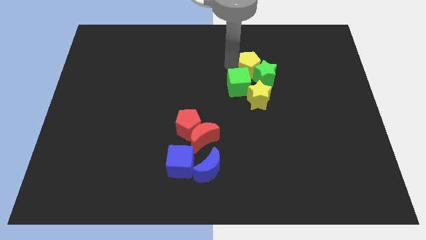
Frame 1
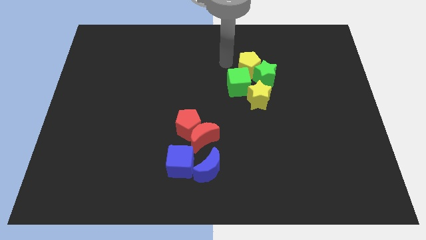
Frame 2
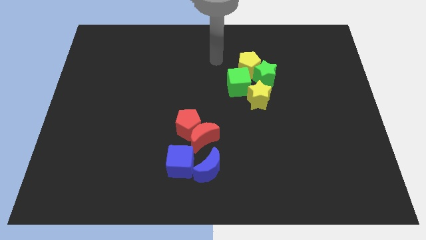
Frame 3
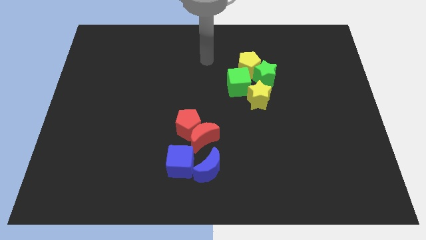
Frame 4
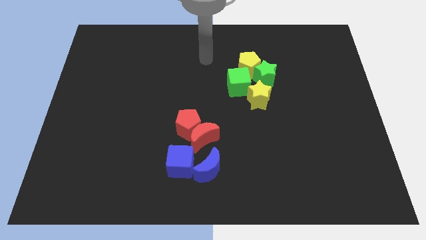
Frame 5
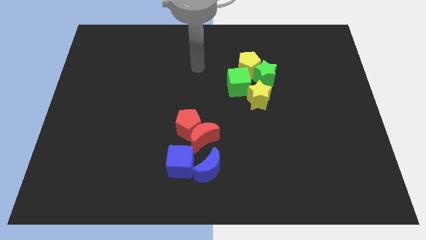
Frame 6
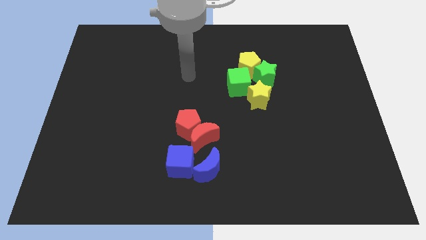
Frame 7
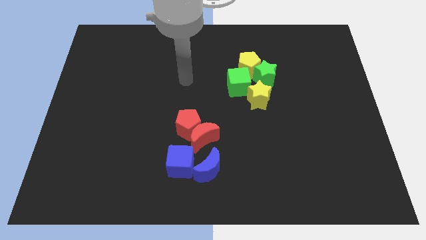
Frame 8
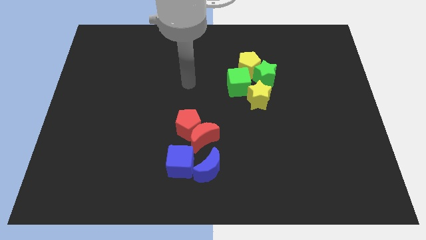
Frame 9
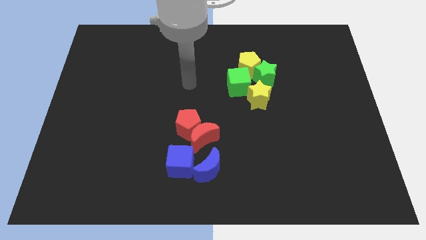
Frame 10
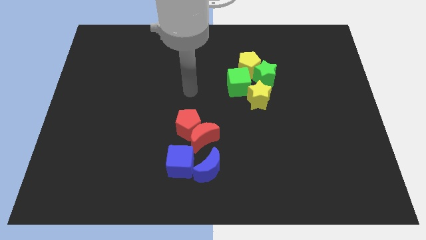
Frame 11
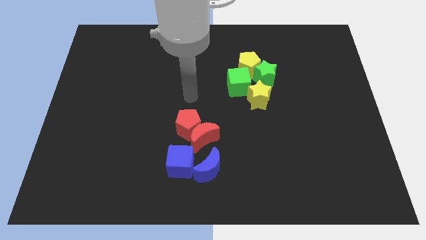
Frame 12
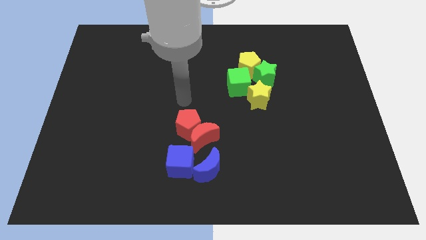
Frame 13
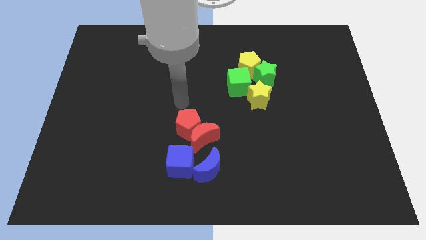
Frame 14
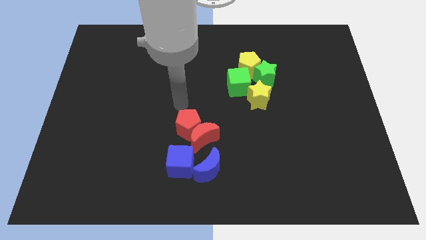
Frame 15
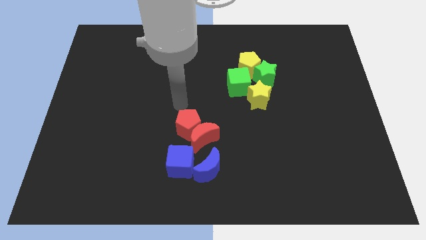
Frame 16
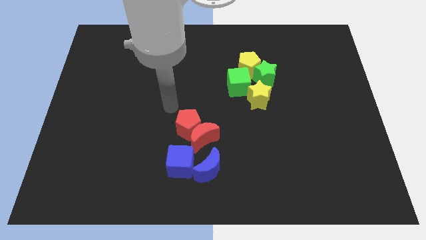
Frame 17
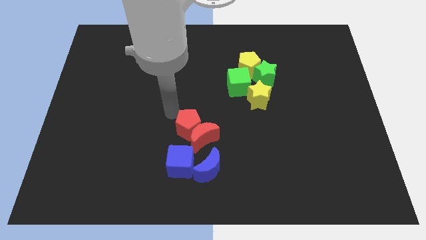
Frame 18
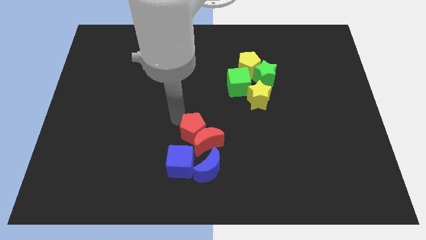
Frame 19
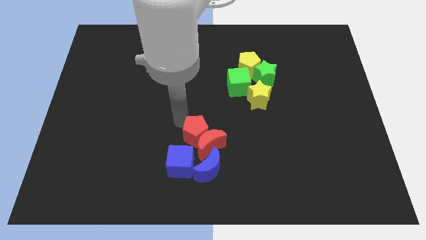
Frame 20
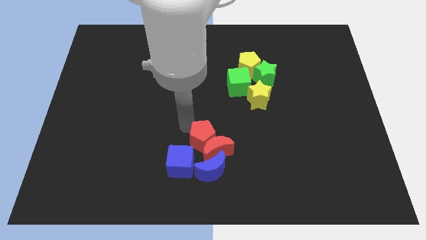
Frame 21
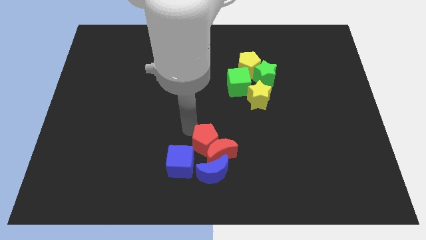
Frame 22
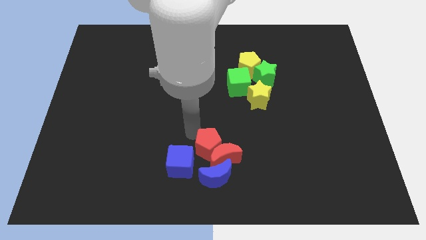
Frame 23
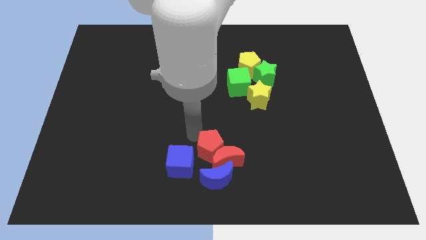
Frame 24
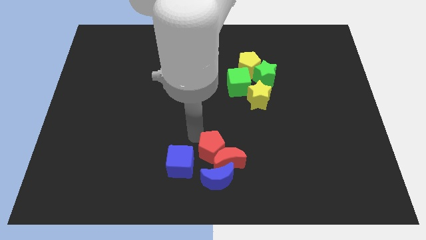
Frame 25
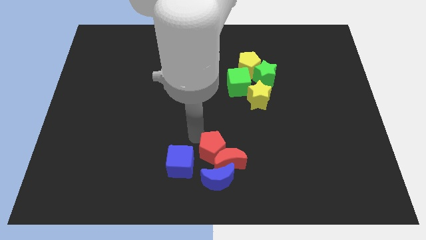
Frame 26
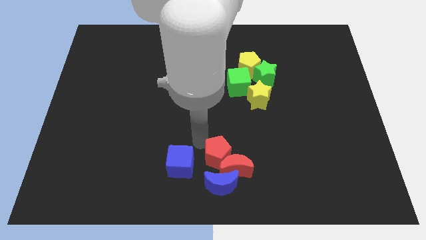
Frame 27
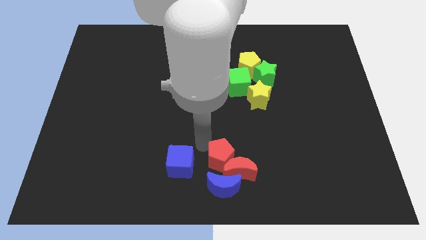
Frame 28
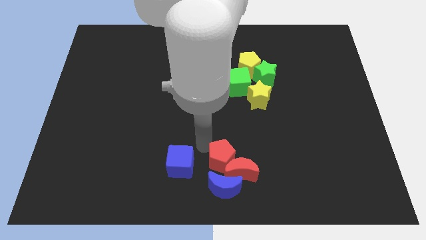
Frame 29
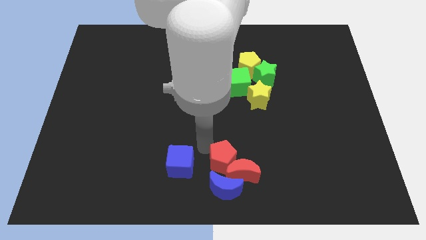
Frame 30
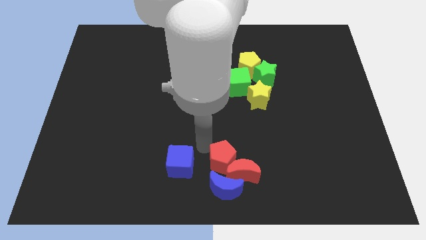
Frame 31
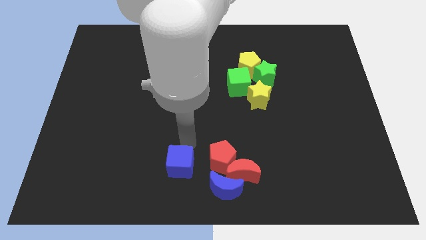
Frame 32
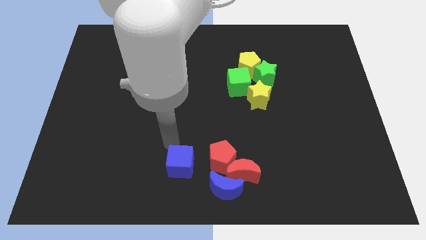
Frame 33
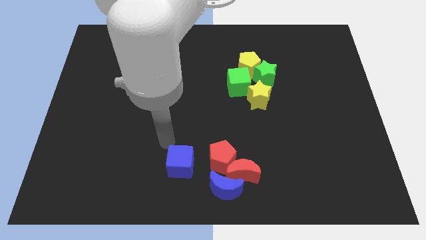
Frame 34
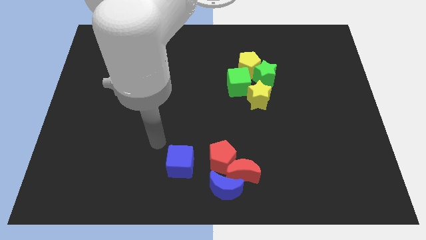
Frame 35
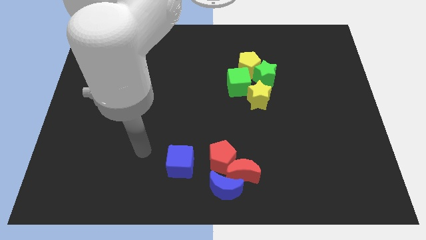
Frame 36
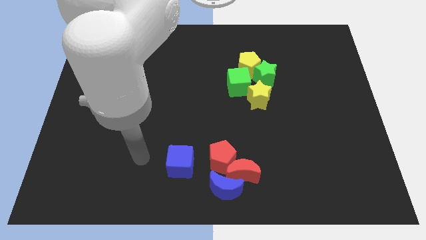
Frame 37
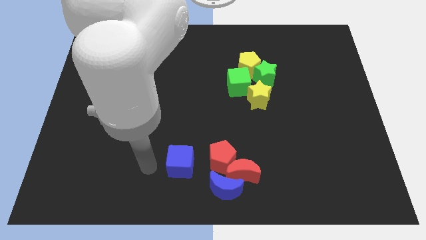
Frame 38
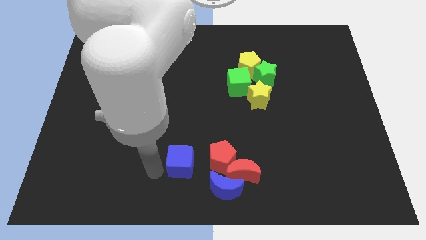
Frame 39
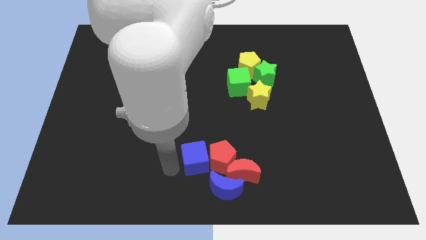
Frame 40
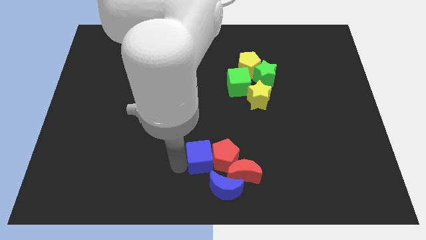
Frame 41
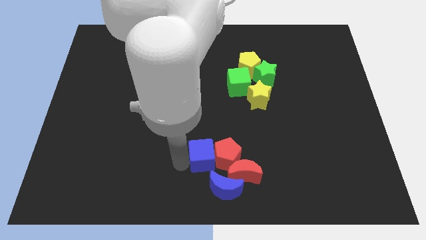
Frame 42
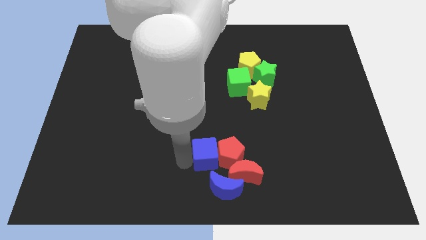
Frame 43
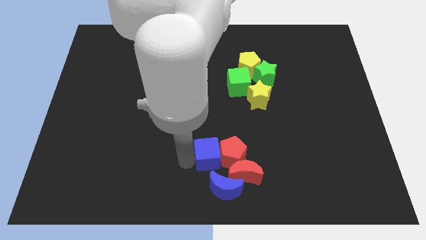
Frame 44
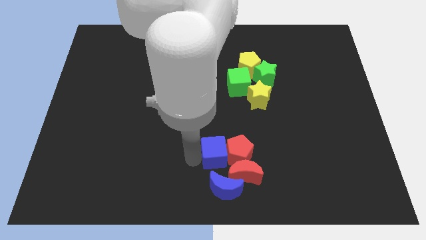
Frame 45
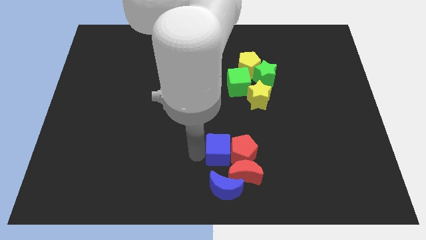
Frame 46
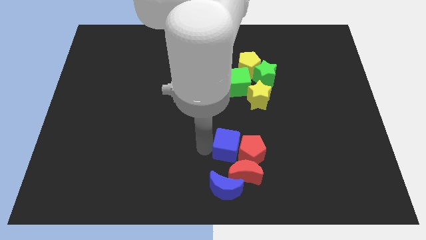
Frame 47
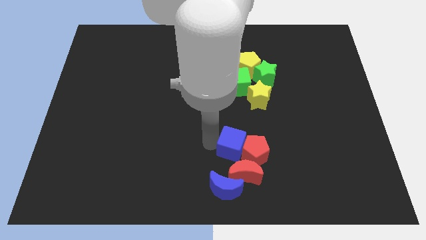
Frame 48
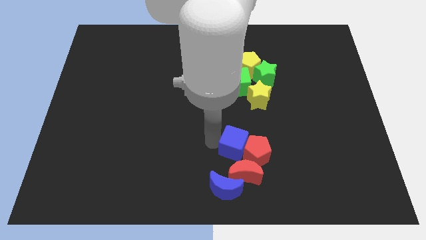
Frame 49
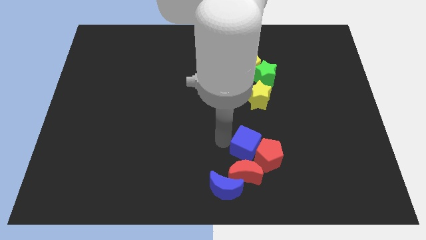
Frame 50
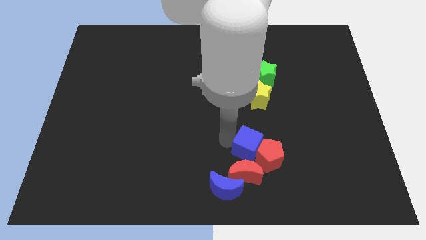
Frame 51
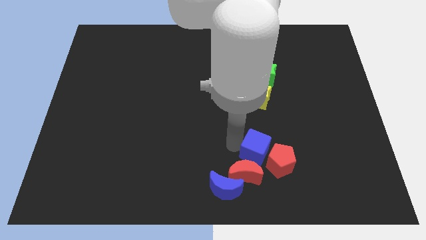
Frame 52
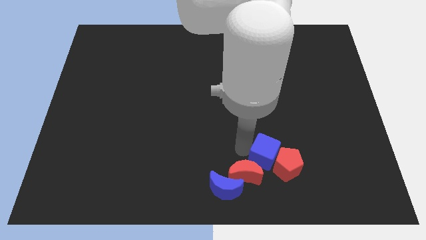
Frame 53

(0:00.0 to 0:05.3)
push a group of blocks to the right side of the board

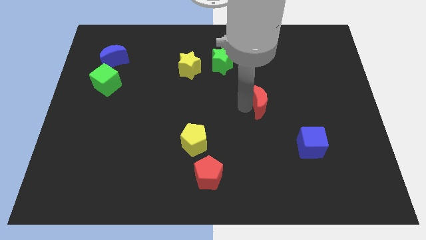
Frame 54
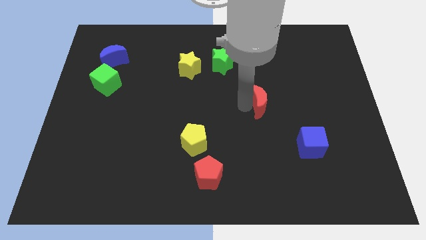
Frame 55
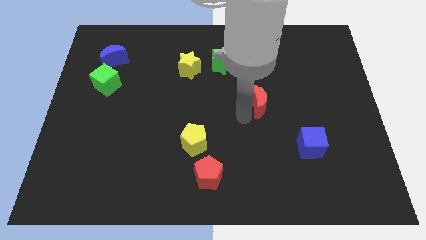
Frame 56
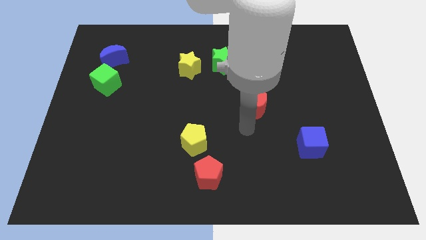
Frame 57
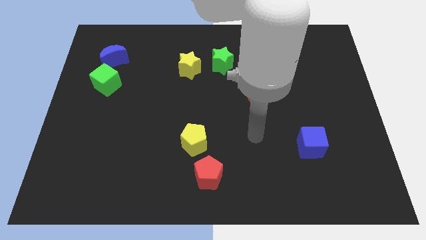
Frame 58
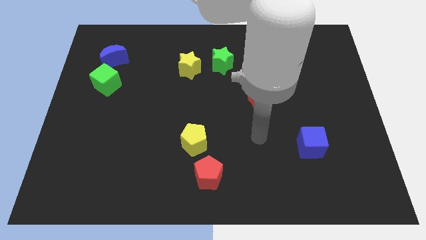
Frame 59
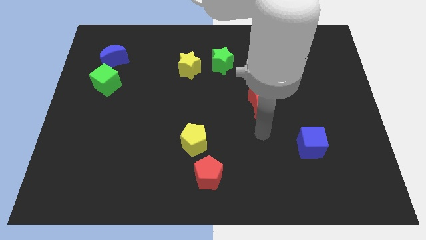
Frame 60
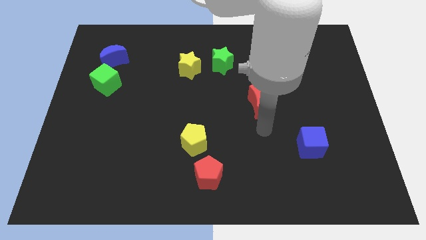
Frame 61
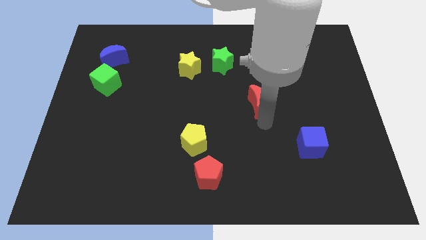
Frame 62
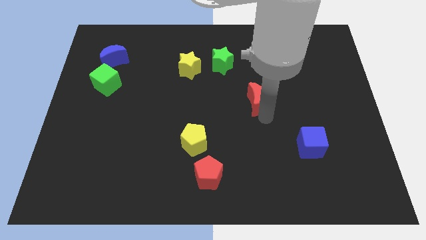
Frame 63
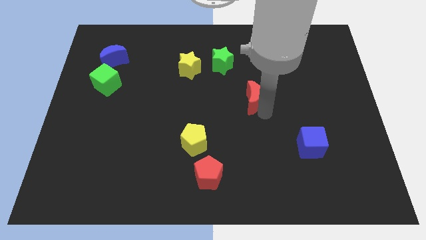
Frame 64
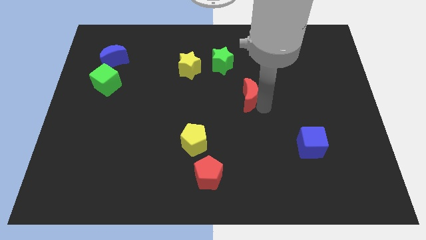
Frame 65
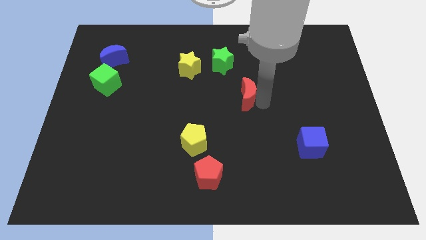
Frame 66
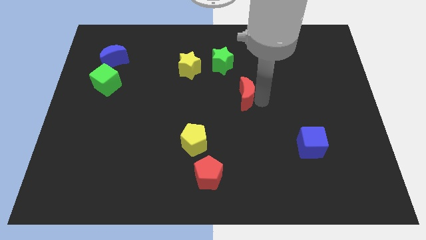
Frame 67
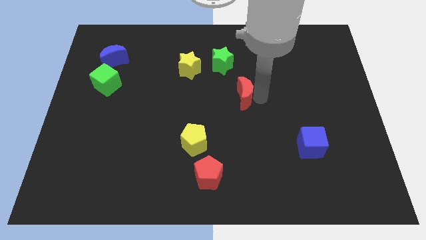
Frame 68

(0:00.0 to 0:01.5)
move the red crescent up slightly

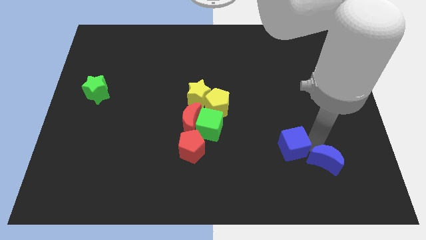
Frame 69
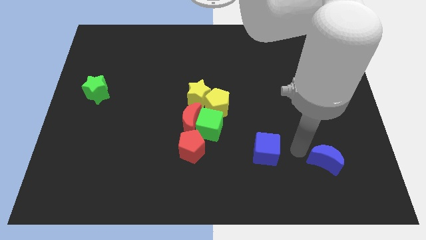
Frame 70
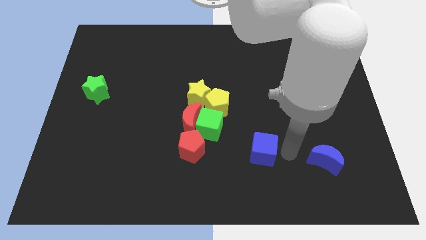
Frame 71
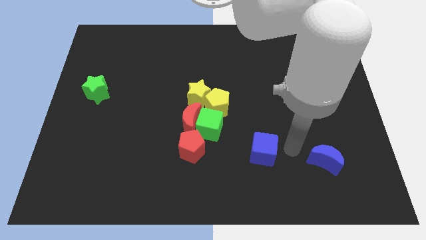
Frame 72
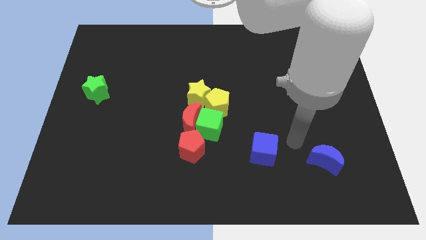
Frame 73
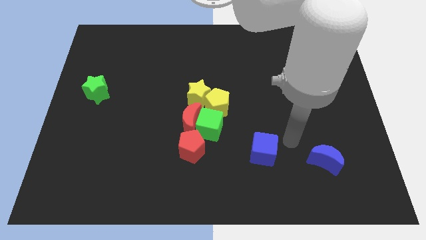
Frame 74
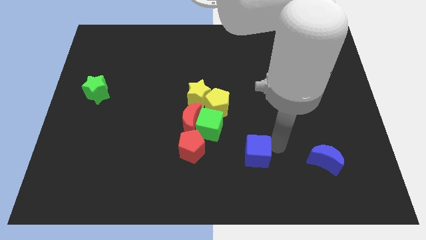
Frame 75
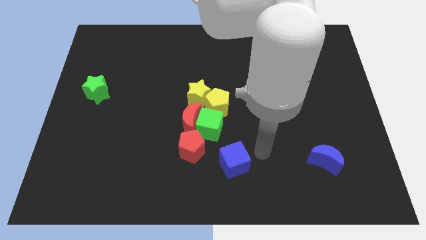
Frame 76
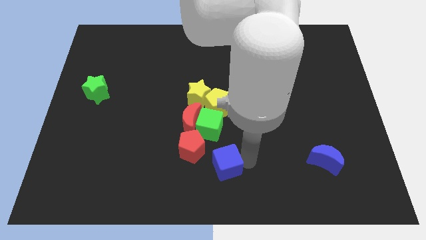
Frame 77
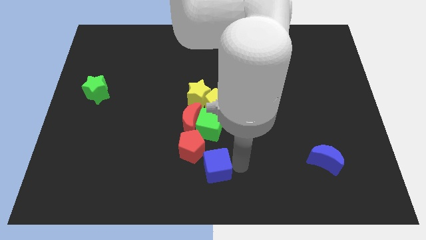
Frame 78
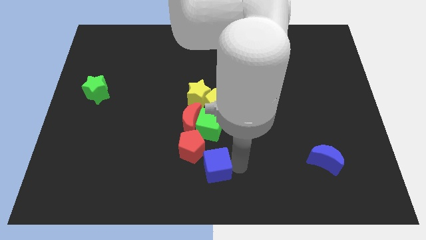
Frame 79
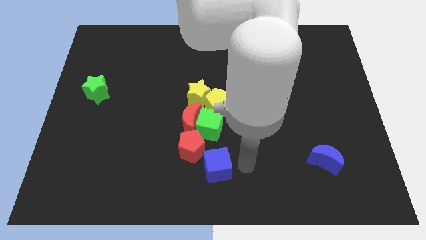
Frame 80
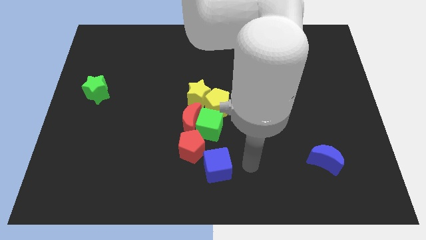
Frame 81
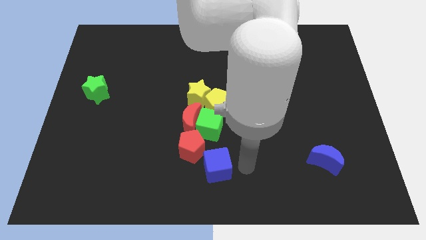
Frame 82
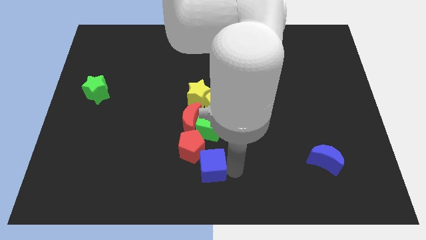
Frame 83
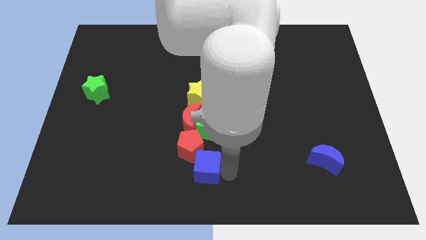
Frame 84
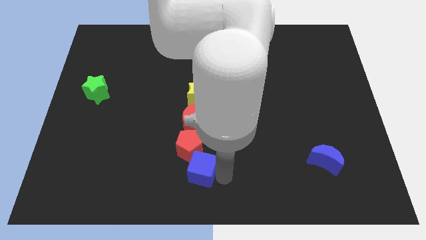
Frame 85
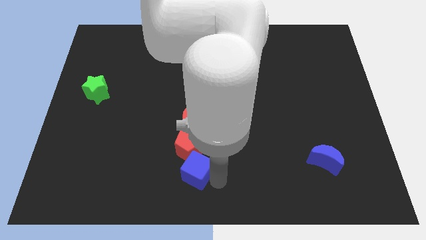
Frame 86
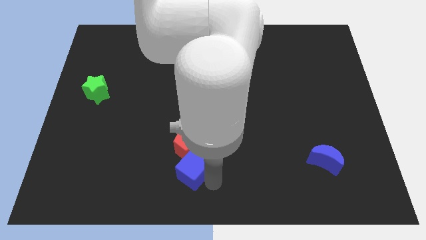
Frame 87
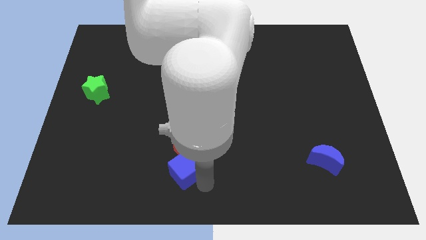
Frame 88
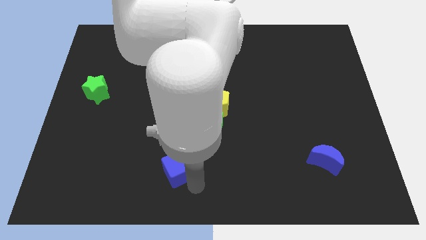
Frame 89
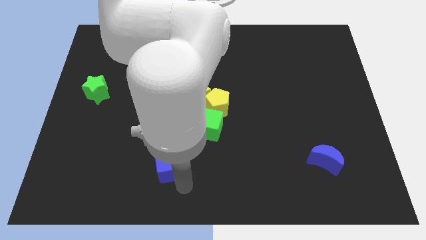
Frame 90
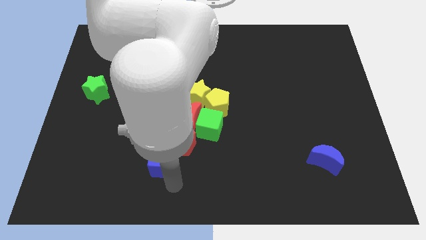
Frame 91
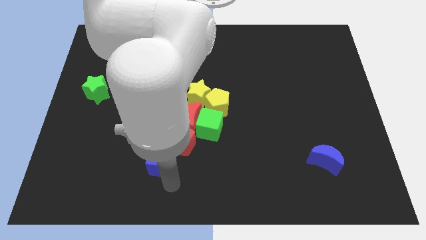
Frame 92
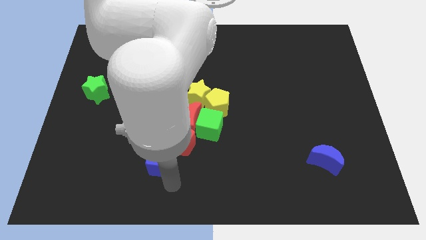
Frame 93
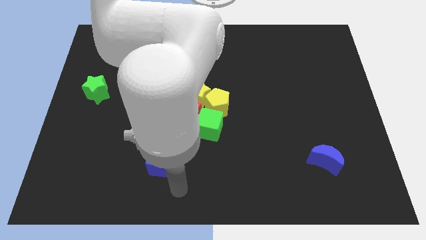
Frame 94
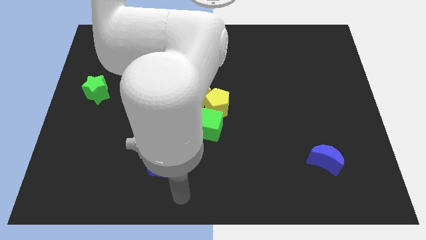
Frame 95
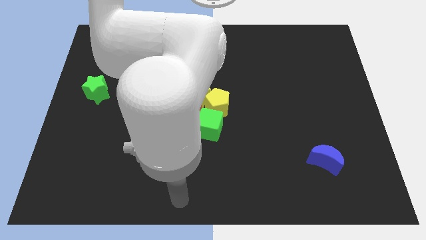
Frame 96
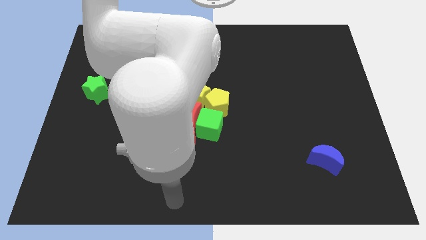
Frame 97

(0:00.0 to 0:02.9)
place blue cube to the bottom of red pentagon
